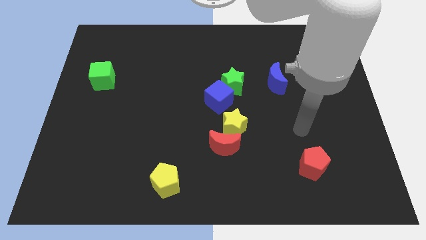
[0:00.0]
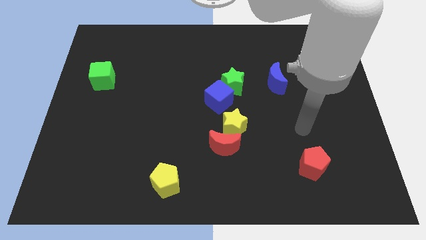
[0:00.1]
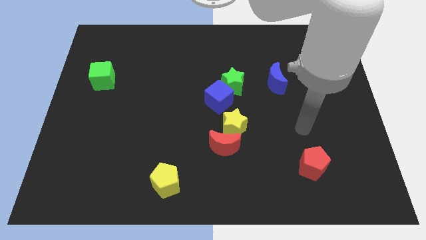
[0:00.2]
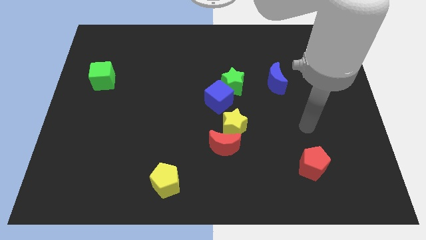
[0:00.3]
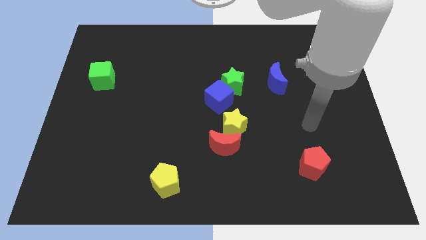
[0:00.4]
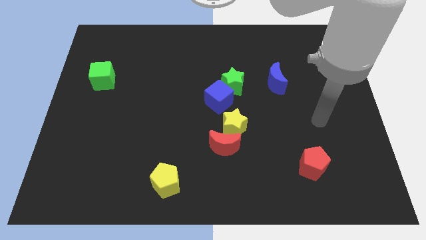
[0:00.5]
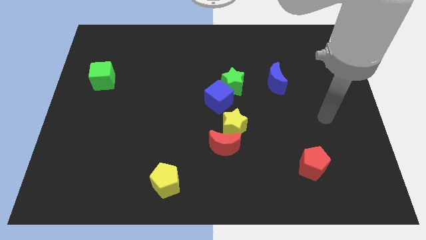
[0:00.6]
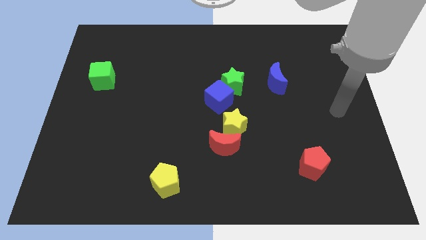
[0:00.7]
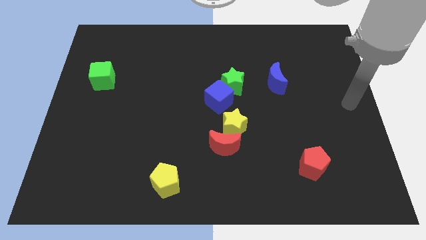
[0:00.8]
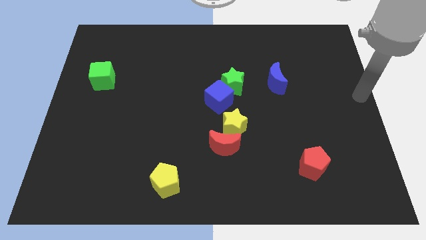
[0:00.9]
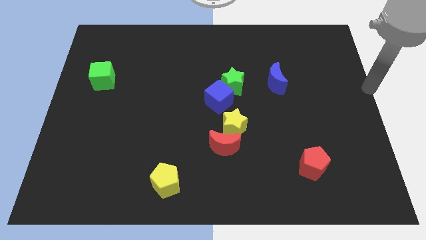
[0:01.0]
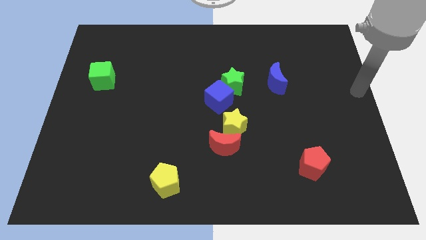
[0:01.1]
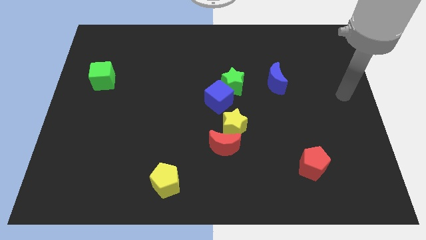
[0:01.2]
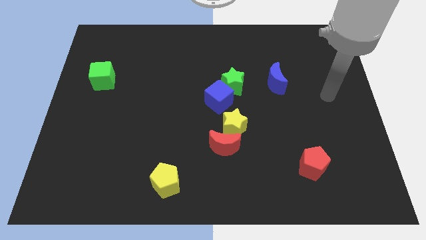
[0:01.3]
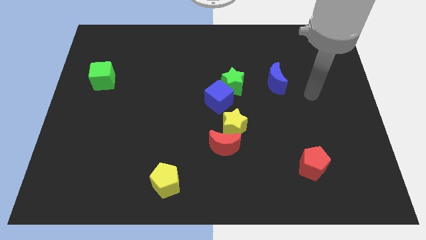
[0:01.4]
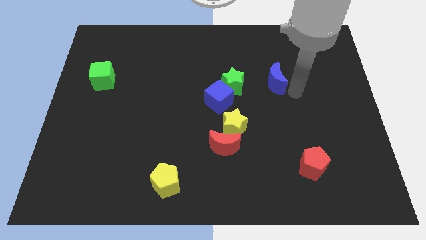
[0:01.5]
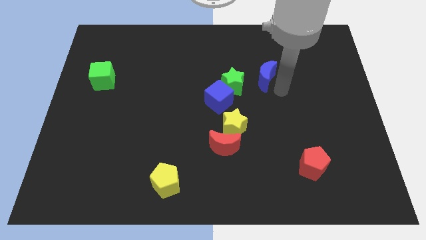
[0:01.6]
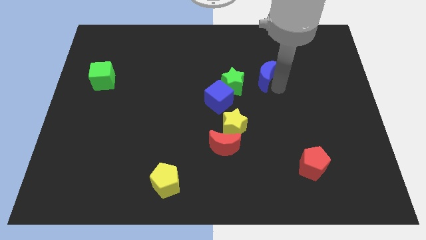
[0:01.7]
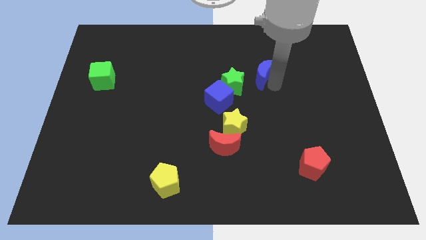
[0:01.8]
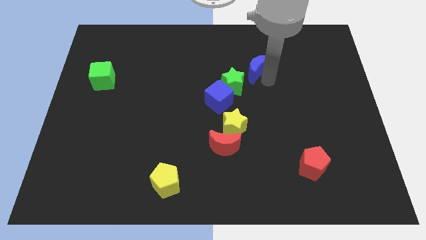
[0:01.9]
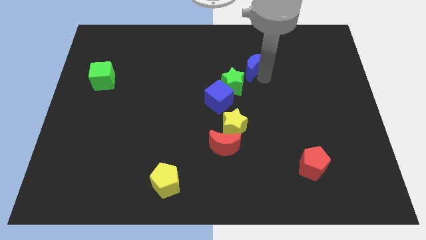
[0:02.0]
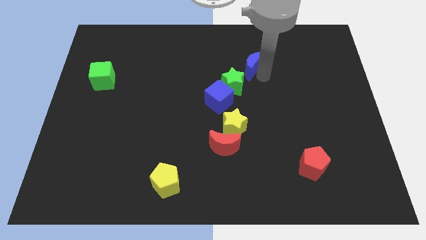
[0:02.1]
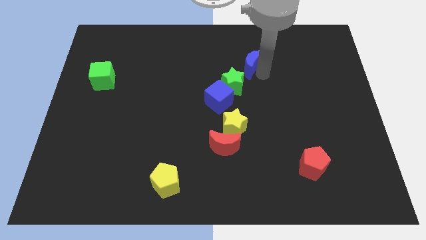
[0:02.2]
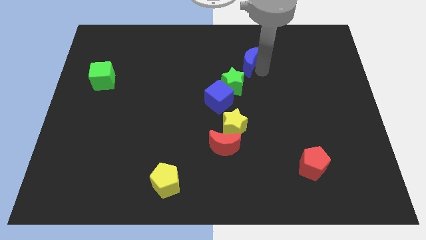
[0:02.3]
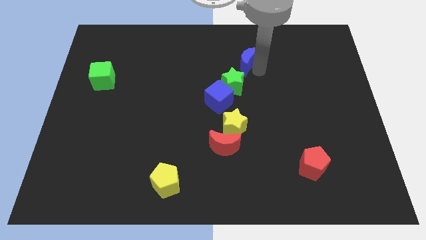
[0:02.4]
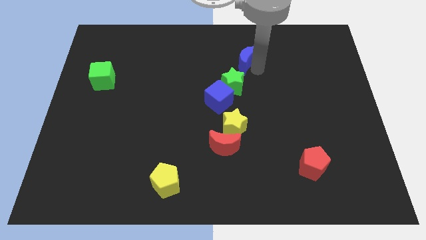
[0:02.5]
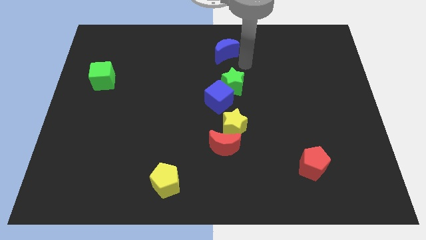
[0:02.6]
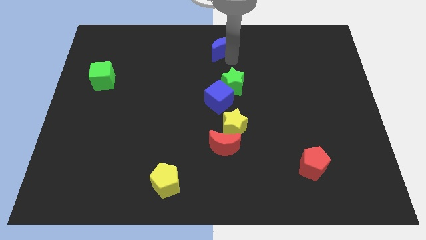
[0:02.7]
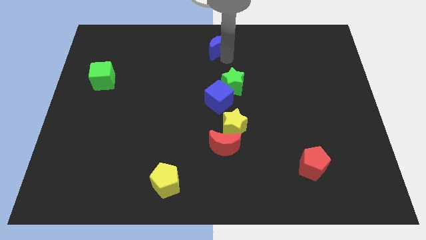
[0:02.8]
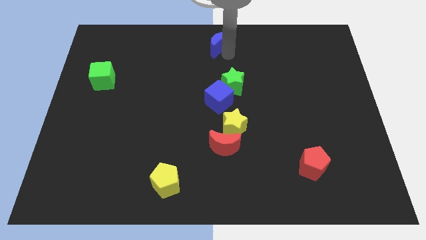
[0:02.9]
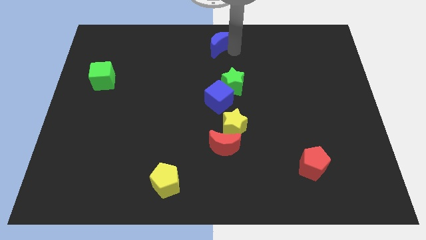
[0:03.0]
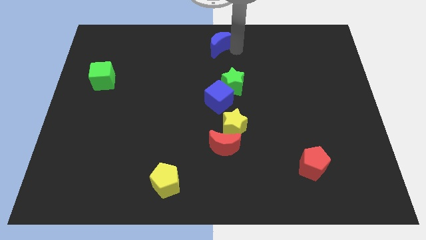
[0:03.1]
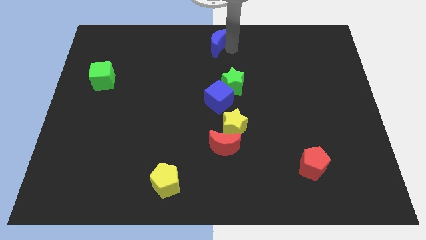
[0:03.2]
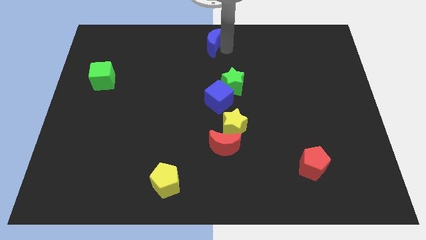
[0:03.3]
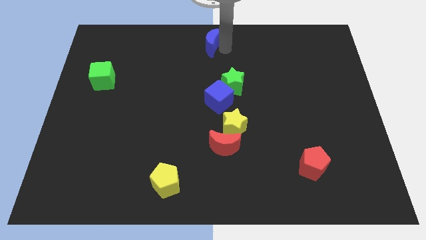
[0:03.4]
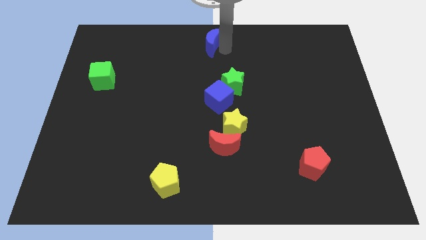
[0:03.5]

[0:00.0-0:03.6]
push the blue crescent to the top center of the table

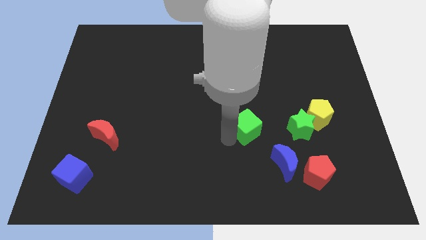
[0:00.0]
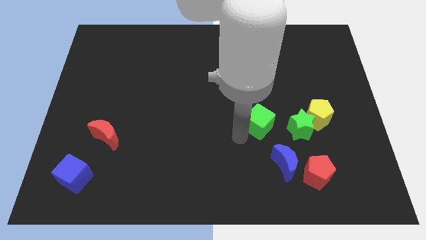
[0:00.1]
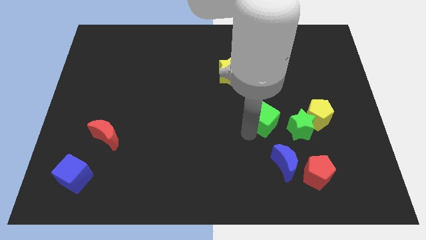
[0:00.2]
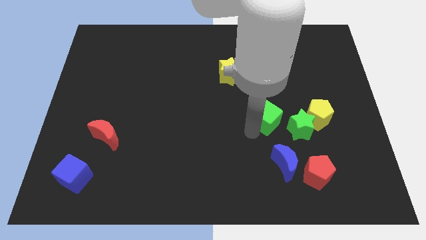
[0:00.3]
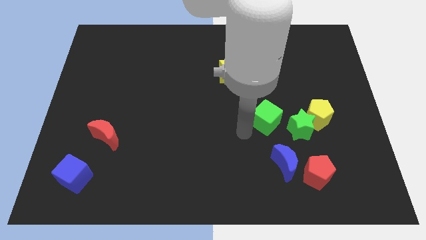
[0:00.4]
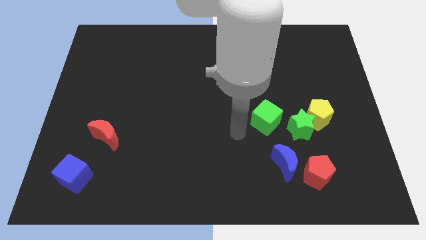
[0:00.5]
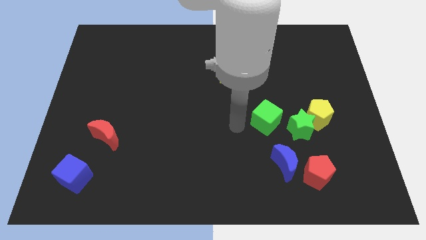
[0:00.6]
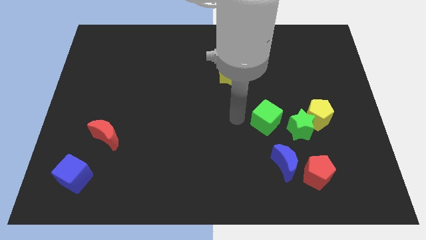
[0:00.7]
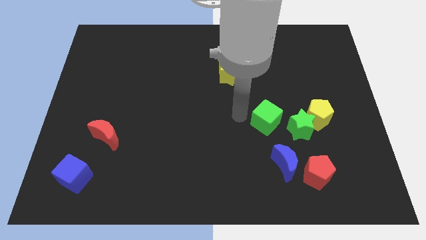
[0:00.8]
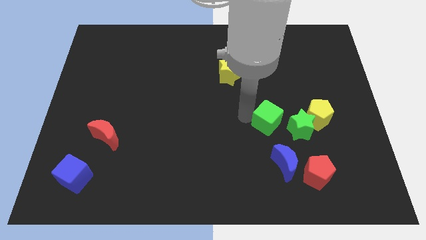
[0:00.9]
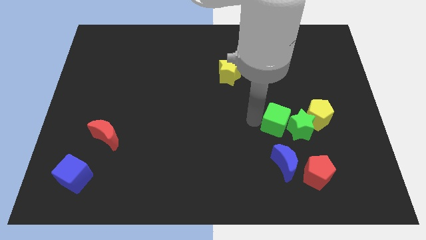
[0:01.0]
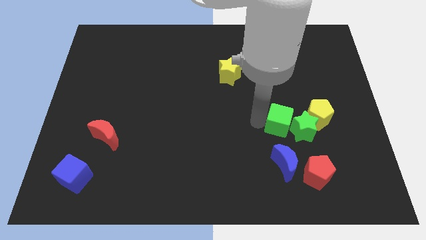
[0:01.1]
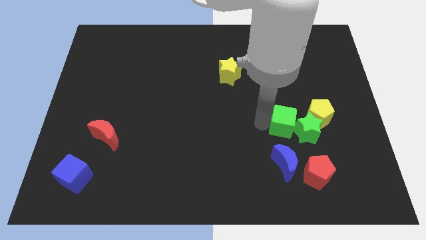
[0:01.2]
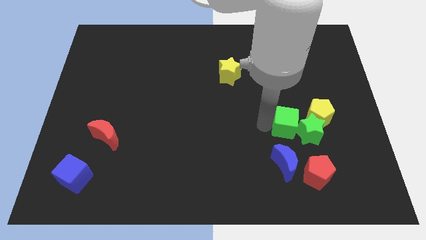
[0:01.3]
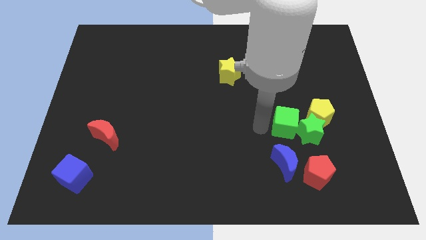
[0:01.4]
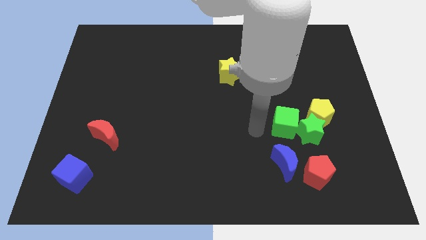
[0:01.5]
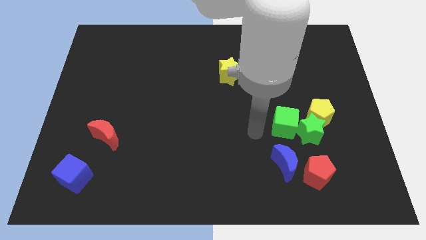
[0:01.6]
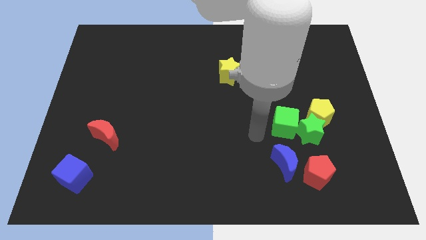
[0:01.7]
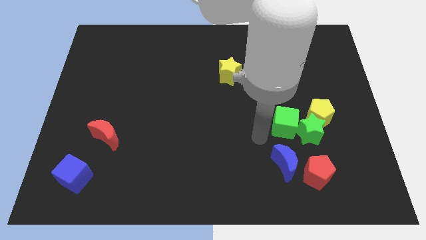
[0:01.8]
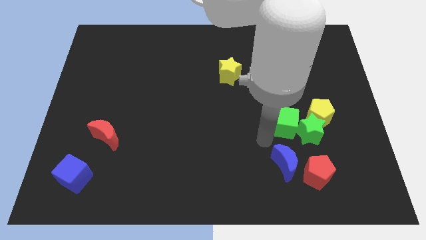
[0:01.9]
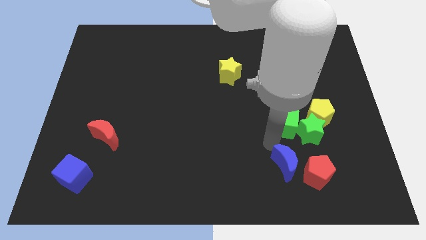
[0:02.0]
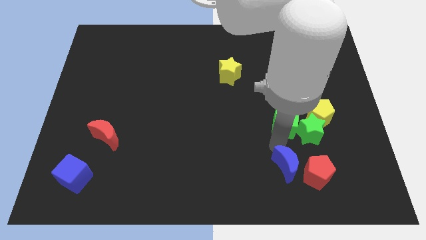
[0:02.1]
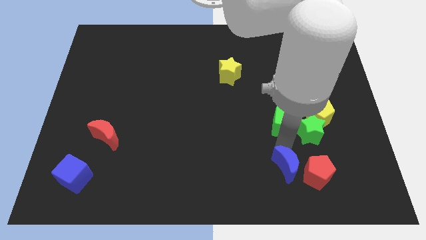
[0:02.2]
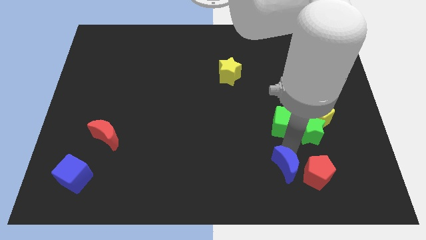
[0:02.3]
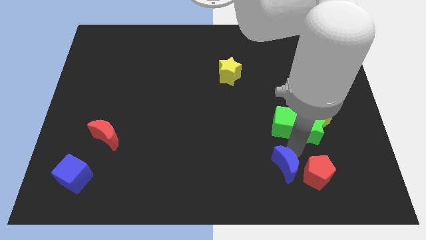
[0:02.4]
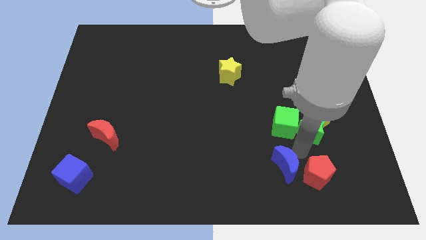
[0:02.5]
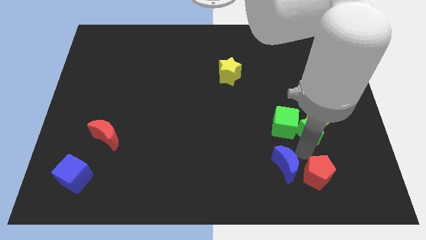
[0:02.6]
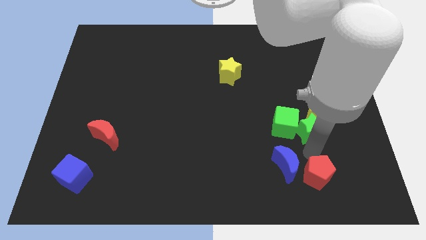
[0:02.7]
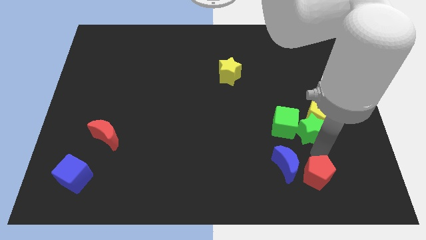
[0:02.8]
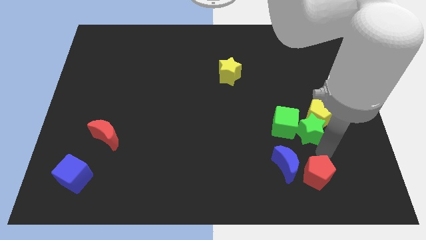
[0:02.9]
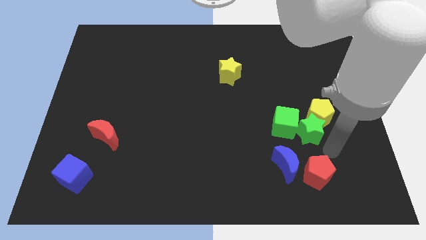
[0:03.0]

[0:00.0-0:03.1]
slightly push the green blocks towards the right side of the board

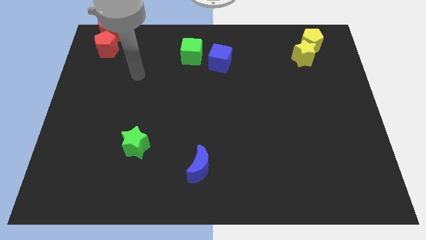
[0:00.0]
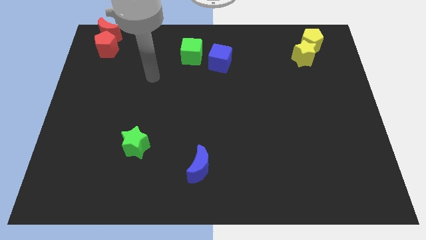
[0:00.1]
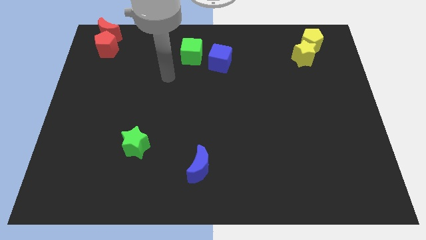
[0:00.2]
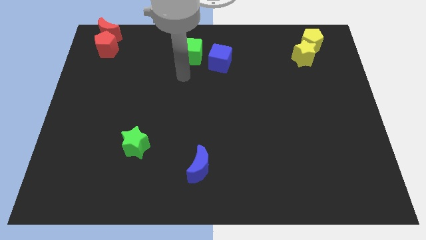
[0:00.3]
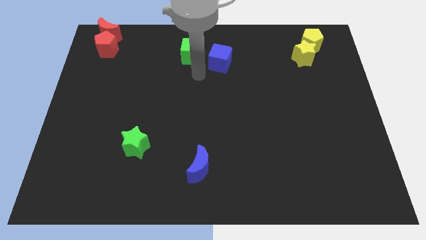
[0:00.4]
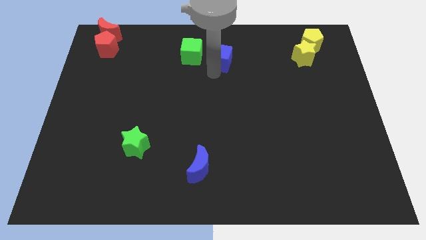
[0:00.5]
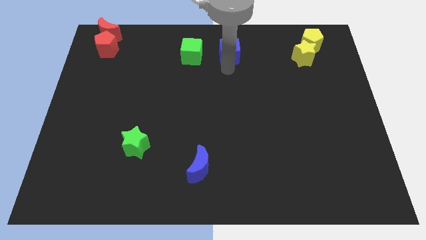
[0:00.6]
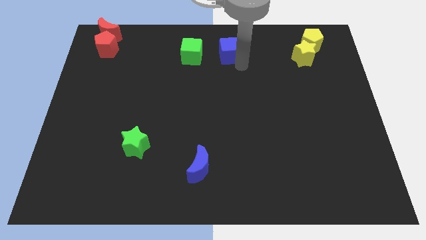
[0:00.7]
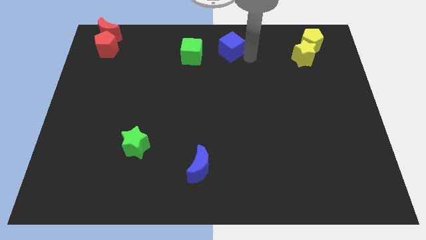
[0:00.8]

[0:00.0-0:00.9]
move the blue cube top center of the board

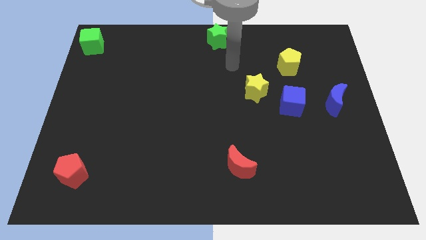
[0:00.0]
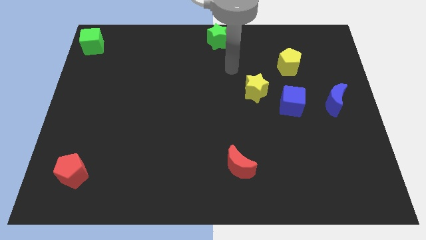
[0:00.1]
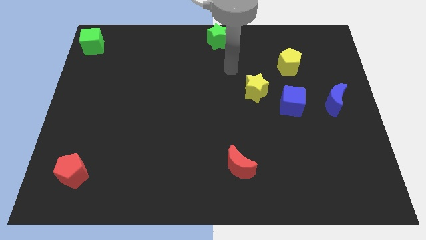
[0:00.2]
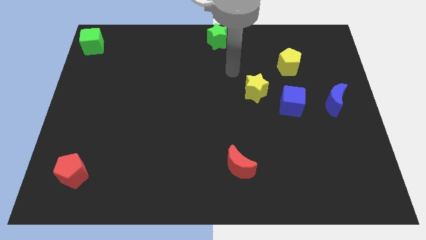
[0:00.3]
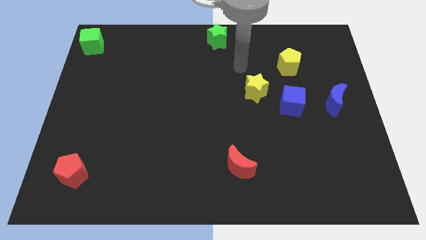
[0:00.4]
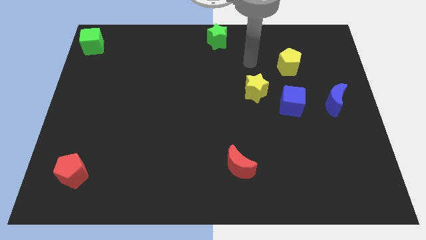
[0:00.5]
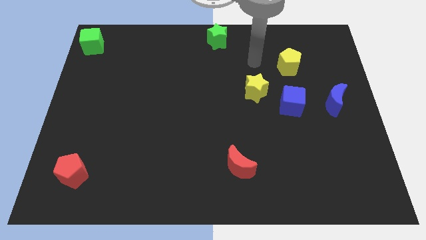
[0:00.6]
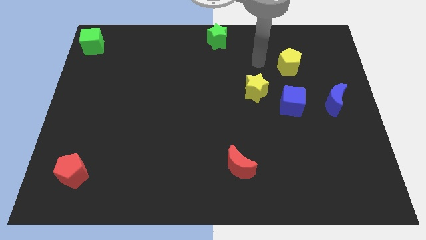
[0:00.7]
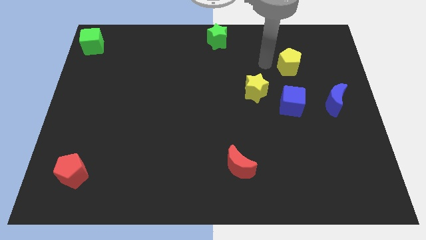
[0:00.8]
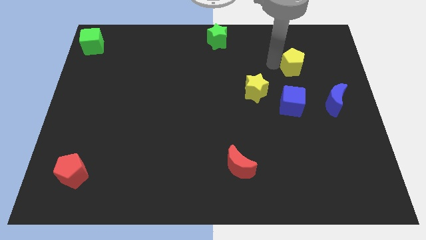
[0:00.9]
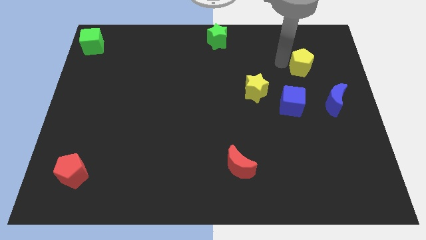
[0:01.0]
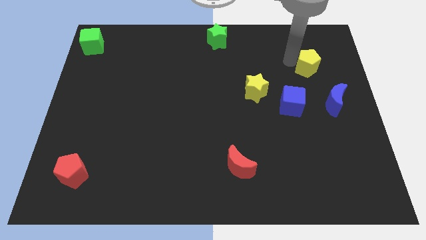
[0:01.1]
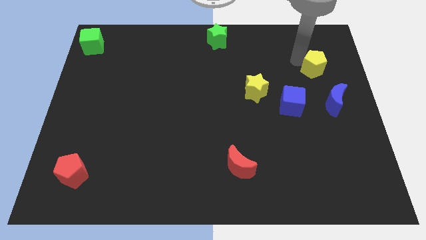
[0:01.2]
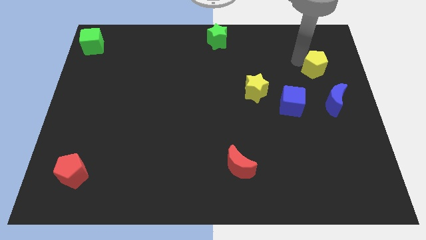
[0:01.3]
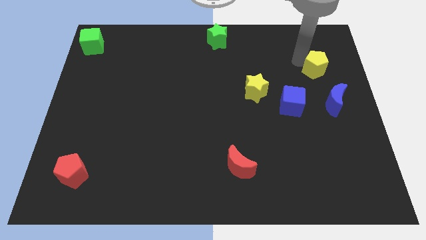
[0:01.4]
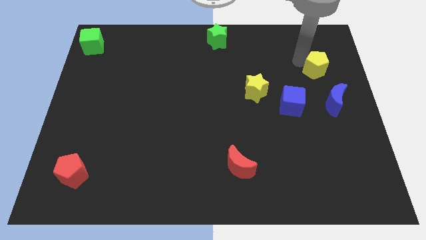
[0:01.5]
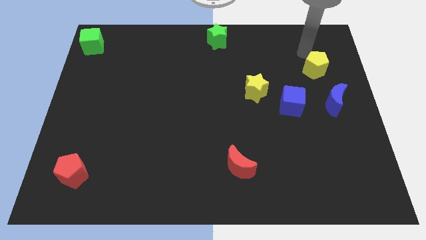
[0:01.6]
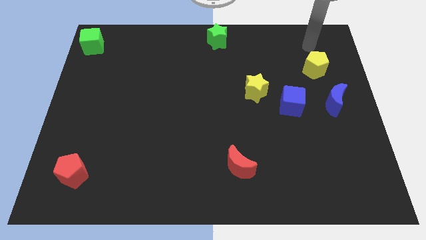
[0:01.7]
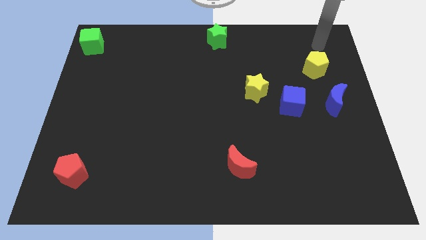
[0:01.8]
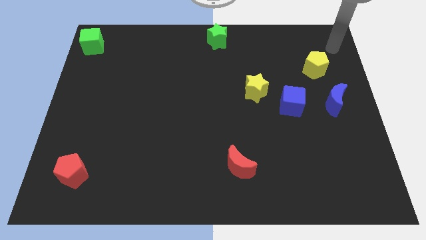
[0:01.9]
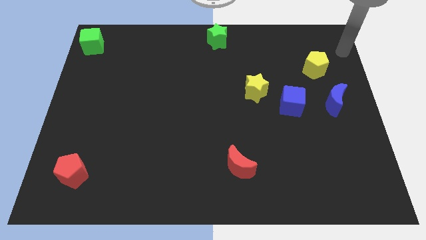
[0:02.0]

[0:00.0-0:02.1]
slide yellow pentagon on top of blue blocks
